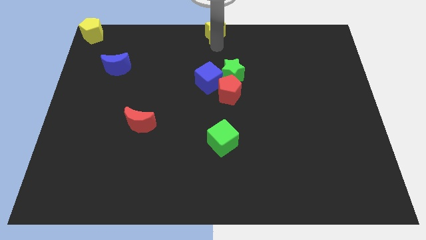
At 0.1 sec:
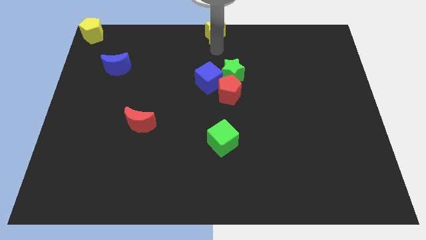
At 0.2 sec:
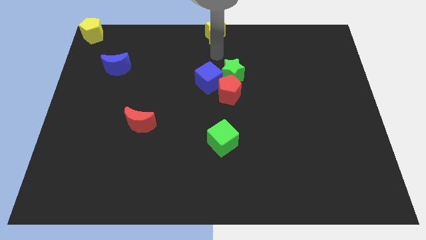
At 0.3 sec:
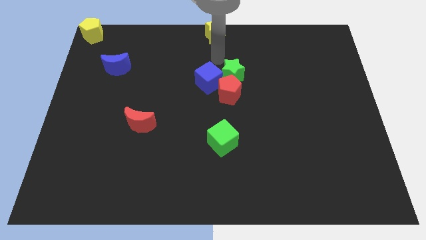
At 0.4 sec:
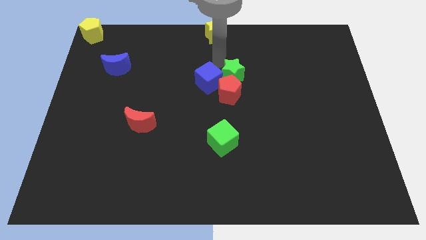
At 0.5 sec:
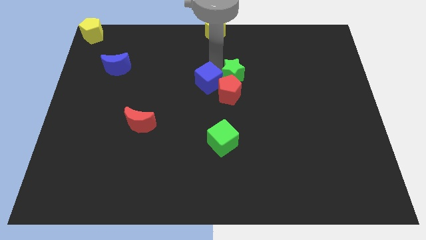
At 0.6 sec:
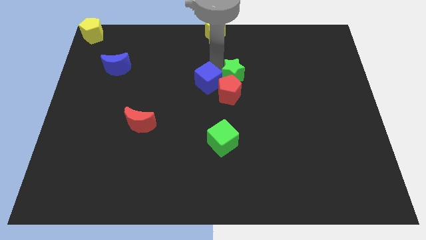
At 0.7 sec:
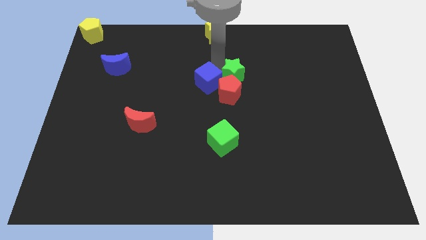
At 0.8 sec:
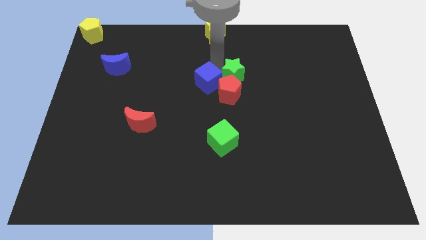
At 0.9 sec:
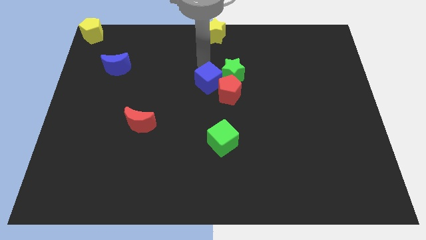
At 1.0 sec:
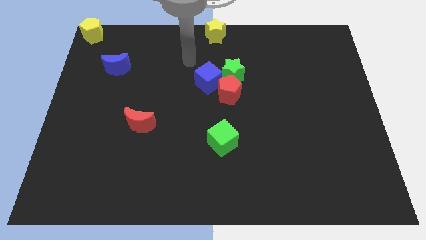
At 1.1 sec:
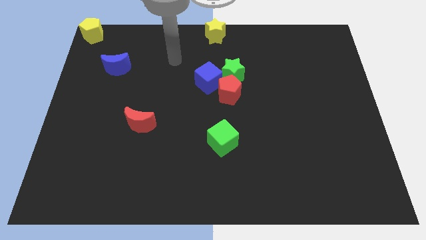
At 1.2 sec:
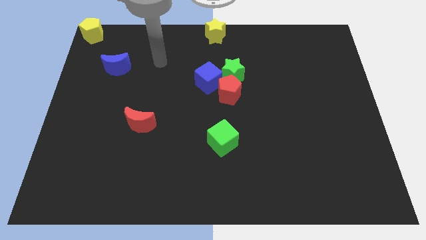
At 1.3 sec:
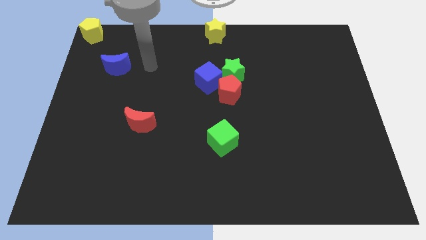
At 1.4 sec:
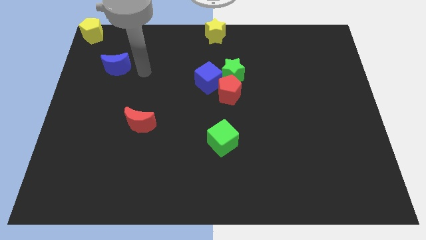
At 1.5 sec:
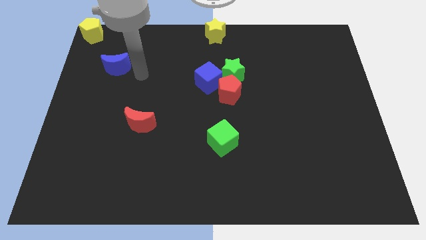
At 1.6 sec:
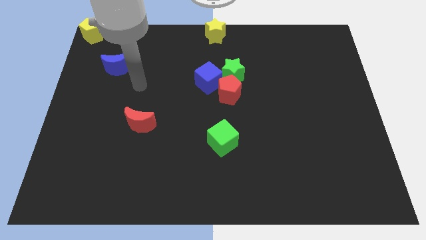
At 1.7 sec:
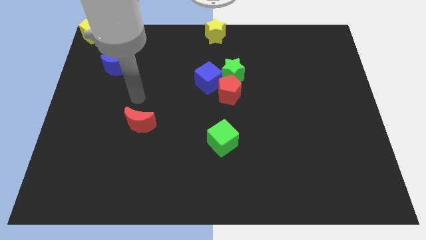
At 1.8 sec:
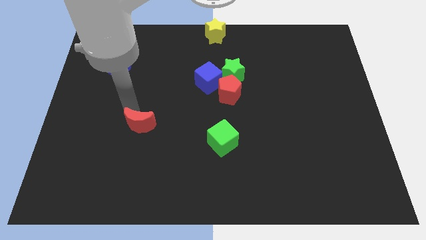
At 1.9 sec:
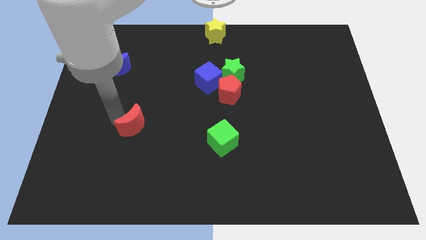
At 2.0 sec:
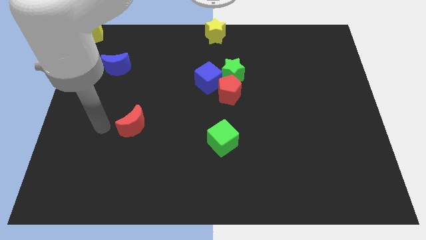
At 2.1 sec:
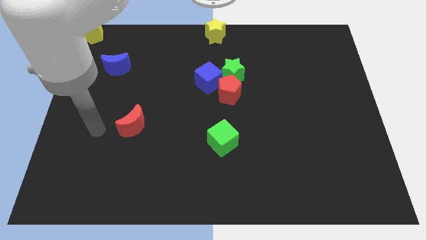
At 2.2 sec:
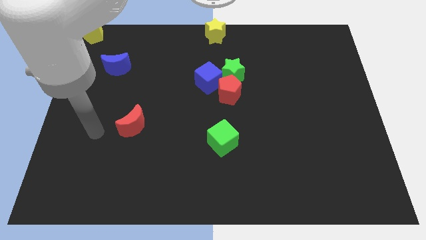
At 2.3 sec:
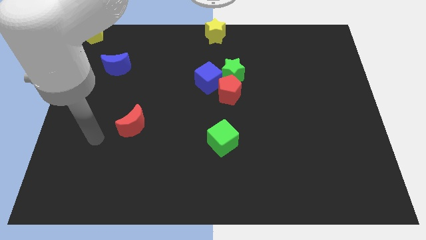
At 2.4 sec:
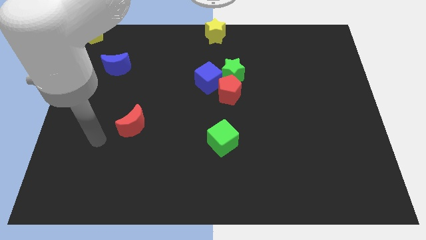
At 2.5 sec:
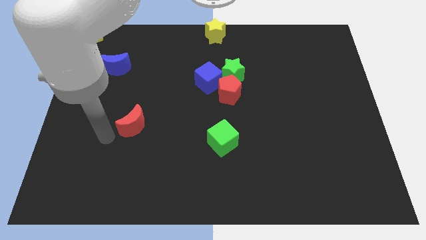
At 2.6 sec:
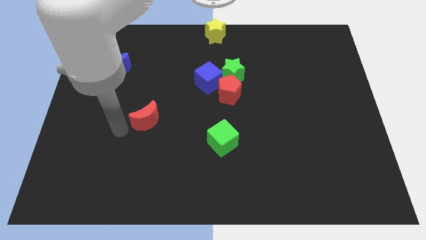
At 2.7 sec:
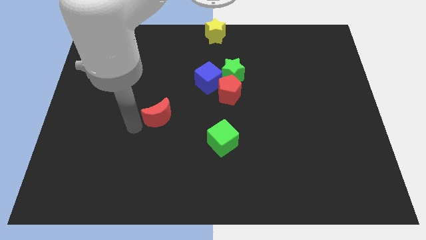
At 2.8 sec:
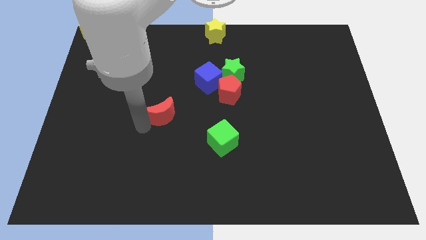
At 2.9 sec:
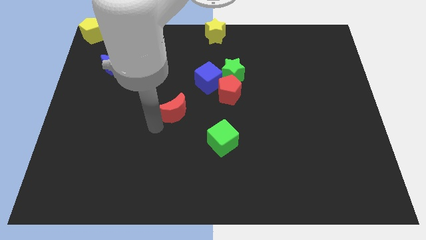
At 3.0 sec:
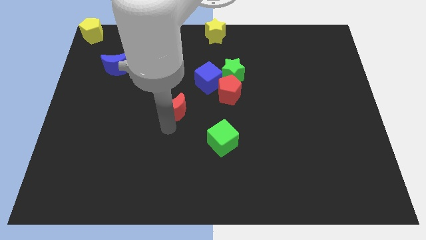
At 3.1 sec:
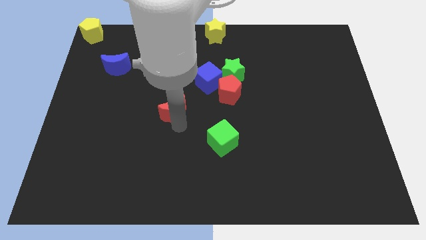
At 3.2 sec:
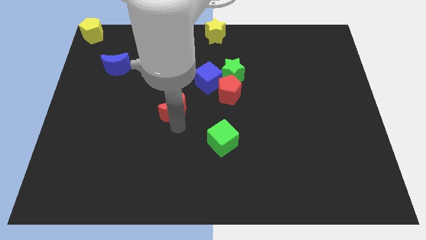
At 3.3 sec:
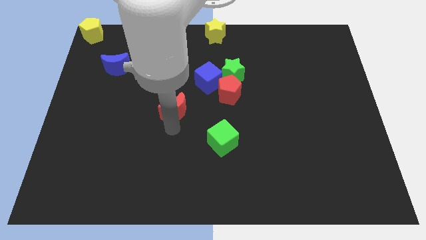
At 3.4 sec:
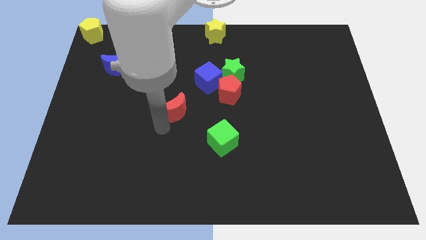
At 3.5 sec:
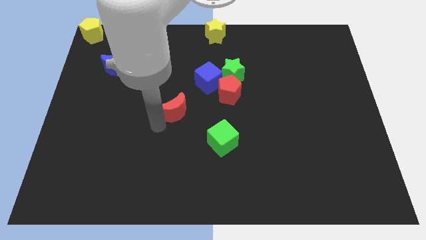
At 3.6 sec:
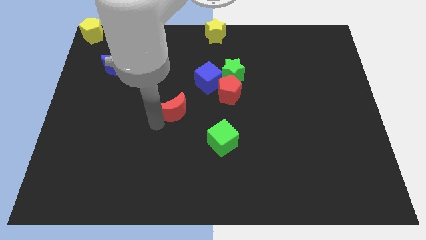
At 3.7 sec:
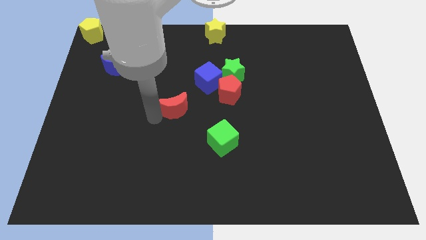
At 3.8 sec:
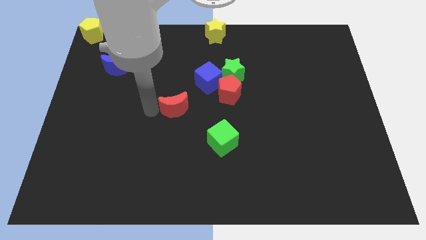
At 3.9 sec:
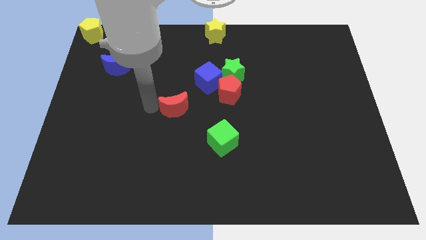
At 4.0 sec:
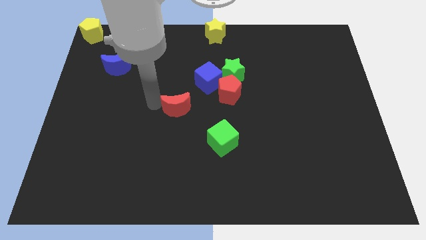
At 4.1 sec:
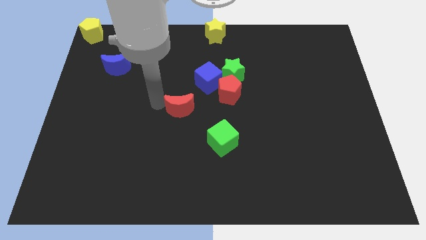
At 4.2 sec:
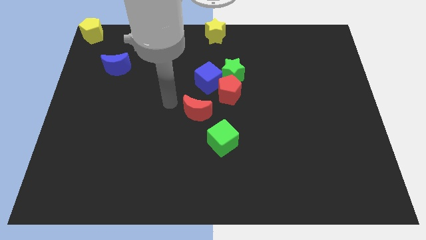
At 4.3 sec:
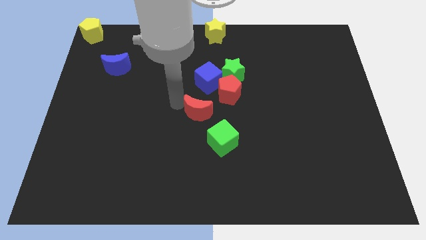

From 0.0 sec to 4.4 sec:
place the red moon diagonally to red pentagon

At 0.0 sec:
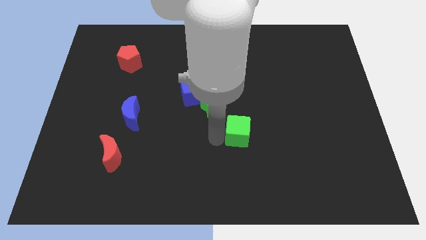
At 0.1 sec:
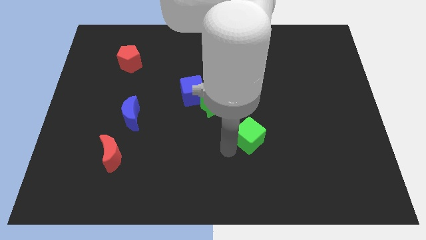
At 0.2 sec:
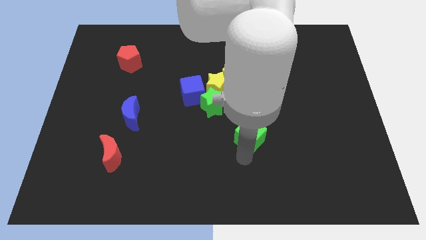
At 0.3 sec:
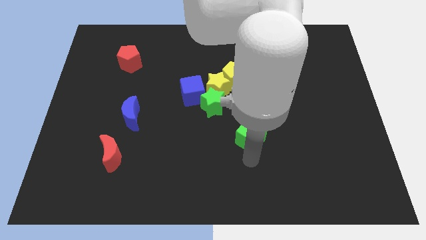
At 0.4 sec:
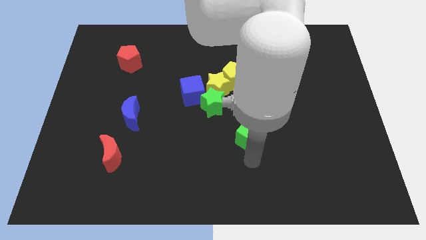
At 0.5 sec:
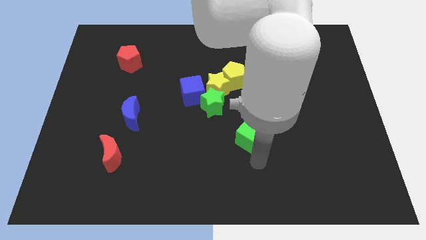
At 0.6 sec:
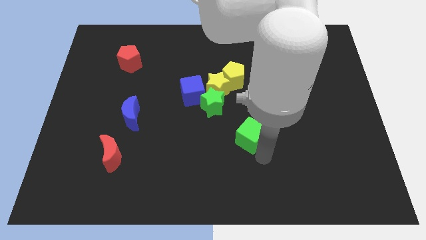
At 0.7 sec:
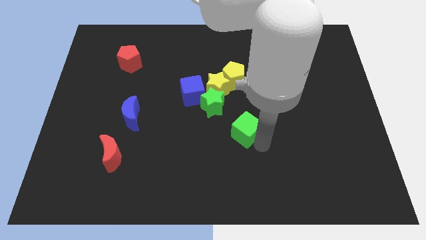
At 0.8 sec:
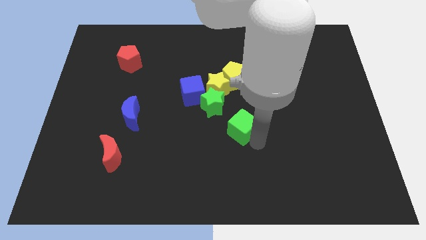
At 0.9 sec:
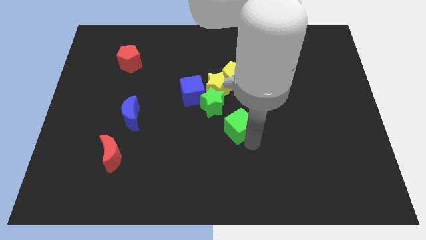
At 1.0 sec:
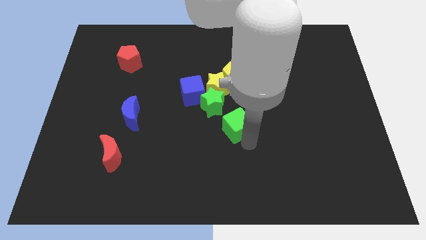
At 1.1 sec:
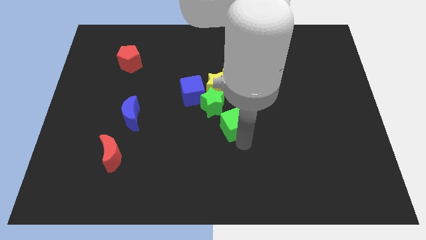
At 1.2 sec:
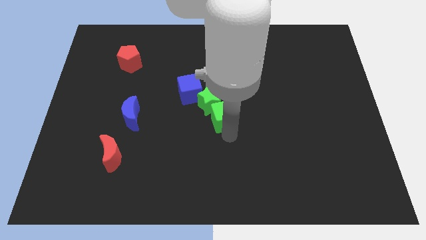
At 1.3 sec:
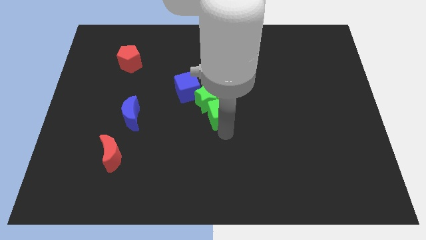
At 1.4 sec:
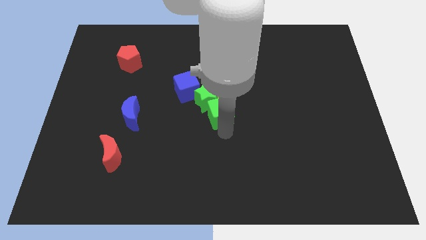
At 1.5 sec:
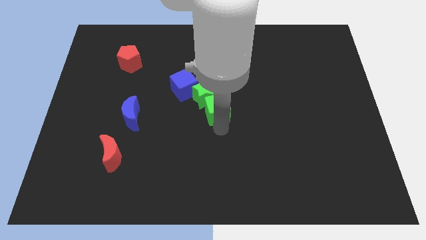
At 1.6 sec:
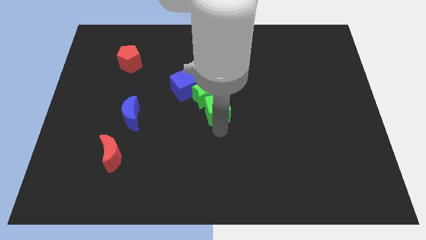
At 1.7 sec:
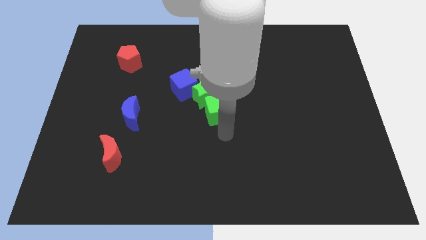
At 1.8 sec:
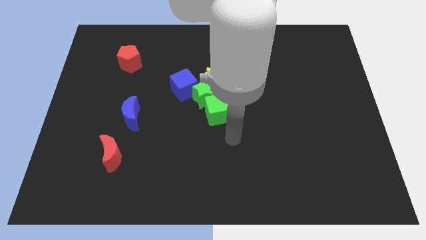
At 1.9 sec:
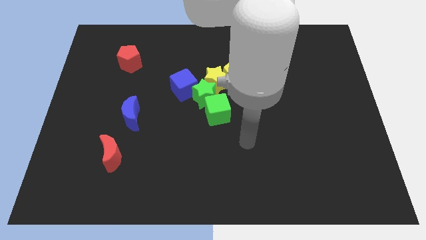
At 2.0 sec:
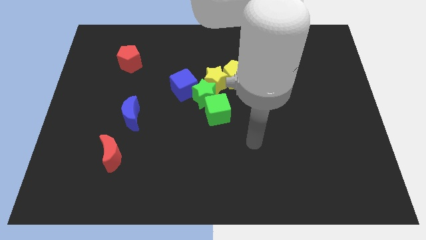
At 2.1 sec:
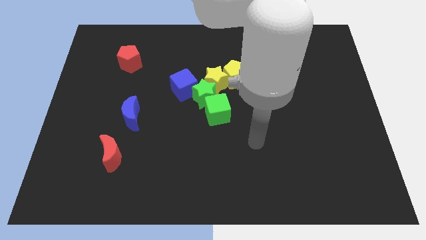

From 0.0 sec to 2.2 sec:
put the green blocks together

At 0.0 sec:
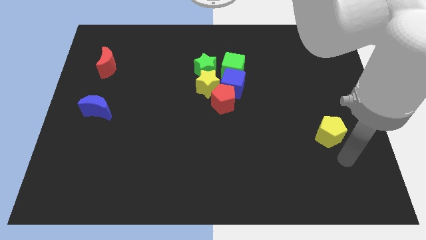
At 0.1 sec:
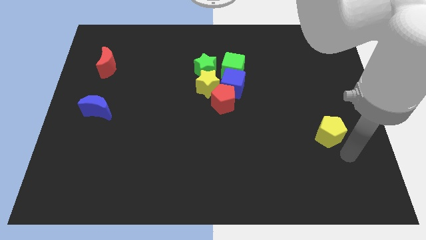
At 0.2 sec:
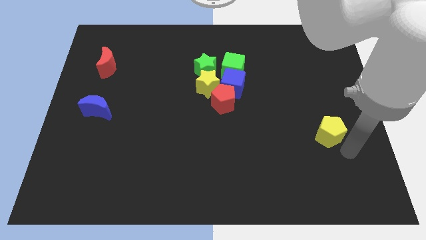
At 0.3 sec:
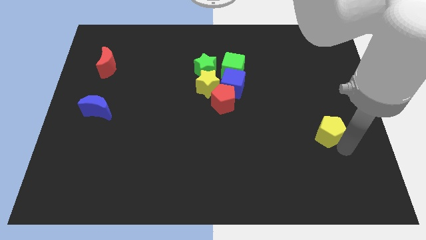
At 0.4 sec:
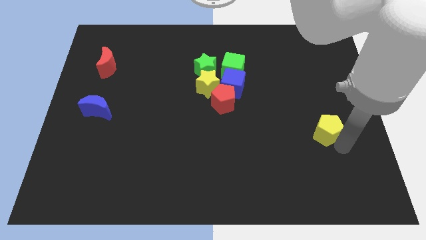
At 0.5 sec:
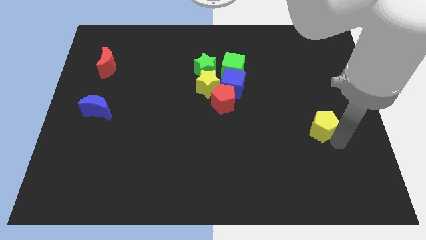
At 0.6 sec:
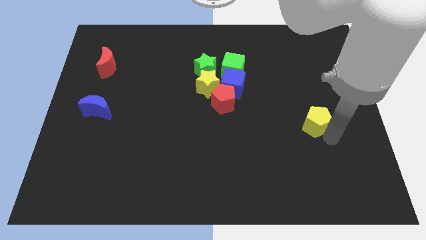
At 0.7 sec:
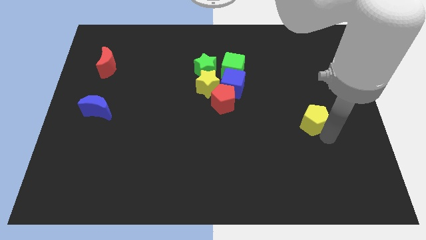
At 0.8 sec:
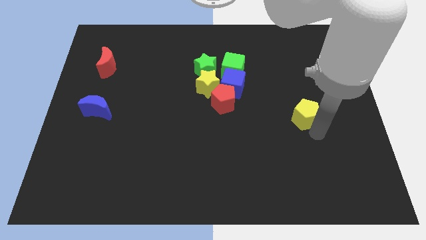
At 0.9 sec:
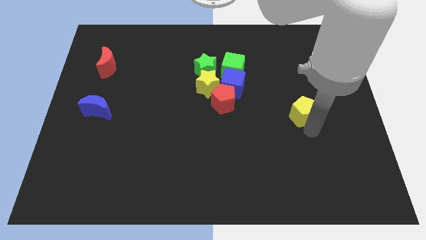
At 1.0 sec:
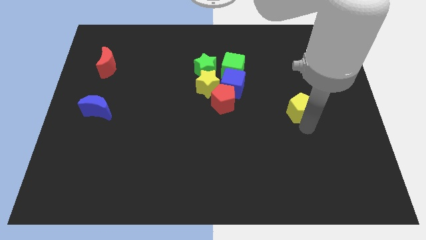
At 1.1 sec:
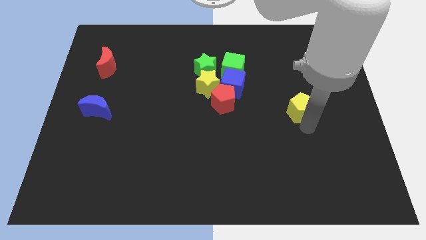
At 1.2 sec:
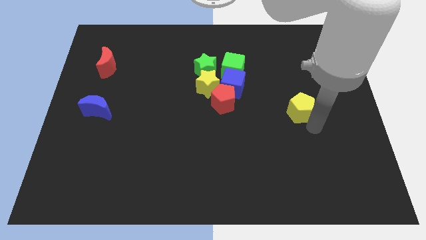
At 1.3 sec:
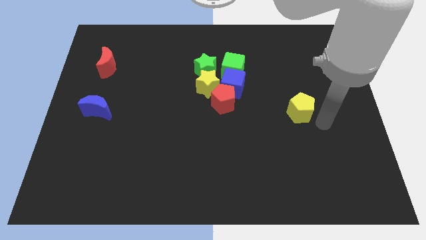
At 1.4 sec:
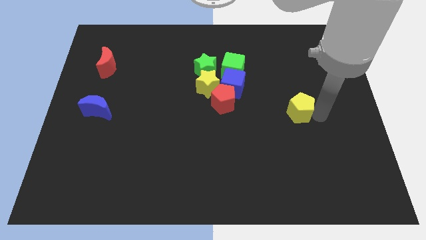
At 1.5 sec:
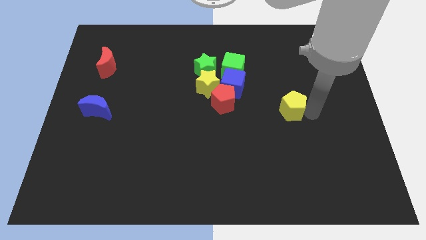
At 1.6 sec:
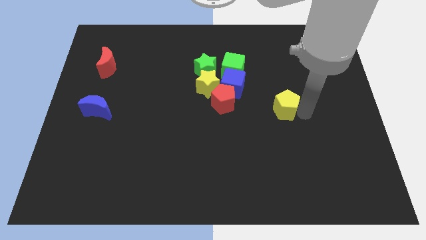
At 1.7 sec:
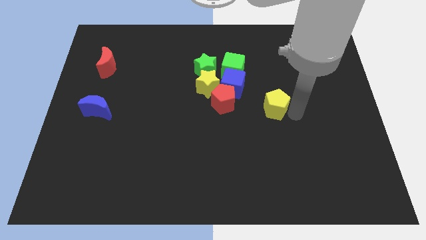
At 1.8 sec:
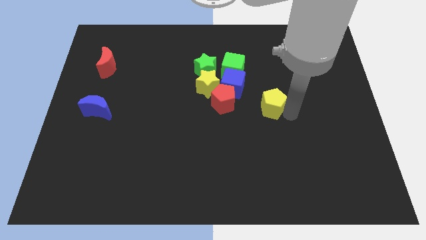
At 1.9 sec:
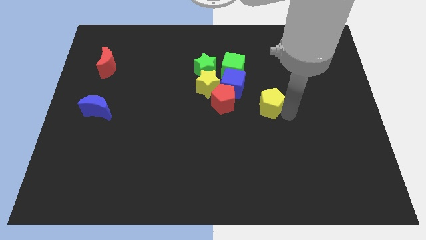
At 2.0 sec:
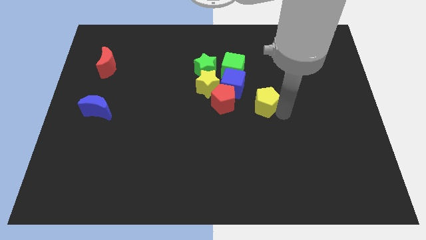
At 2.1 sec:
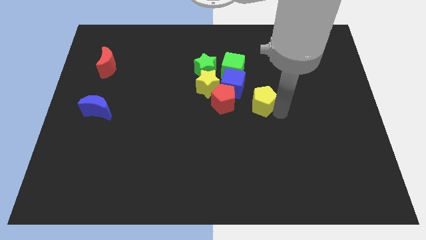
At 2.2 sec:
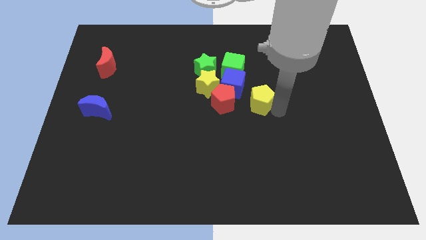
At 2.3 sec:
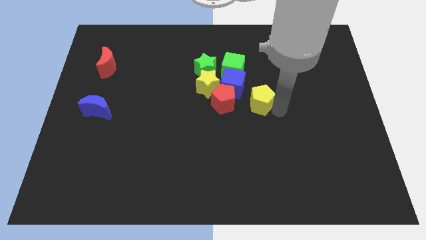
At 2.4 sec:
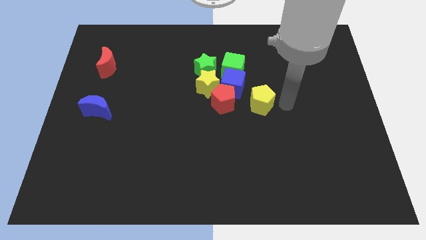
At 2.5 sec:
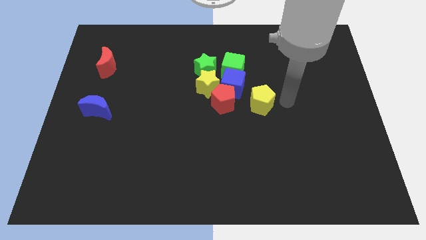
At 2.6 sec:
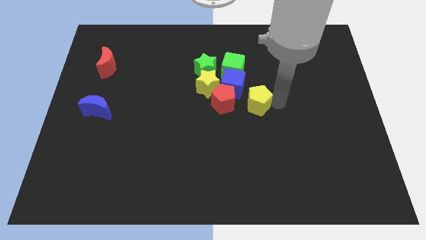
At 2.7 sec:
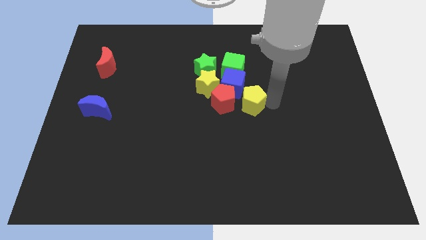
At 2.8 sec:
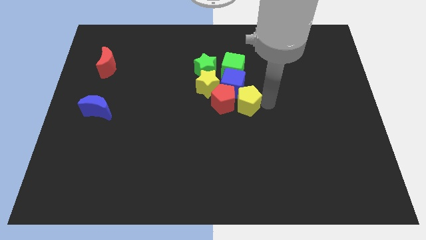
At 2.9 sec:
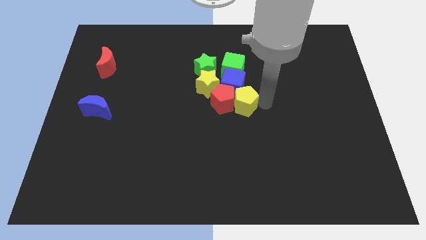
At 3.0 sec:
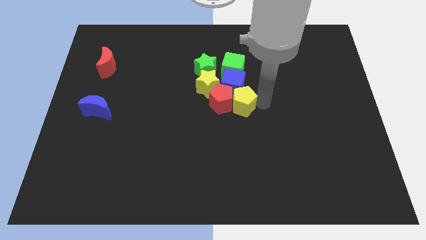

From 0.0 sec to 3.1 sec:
place yellow pentagon right to red pentagon
